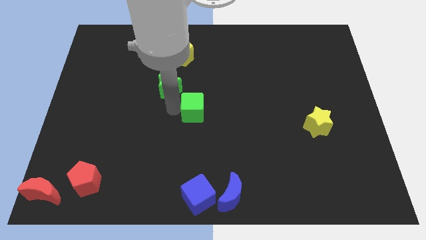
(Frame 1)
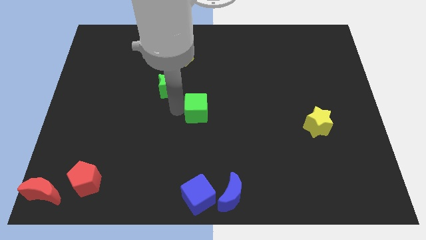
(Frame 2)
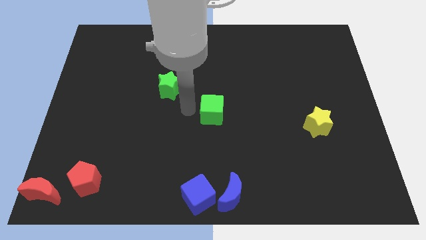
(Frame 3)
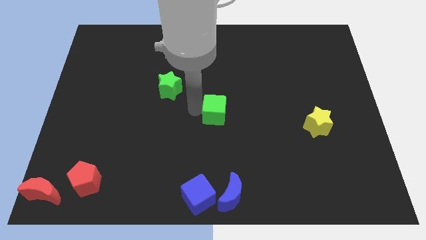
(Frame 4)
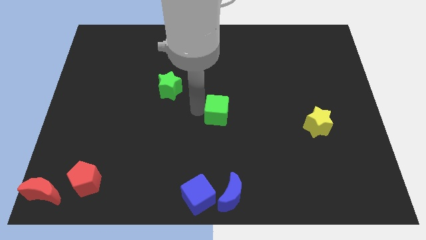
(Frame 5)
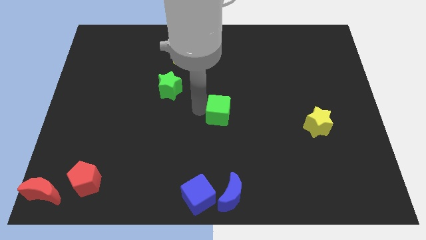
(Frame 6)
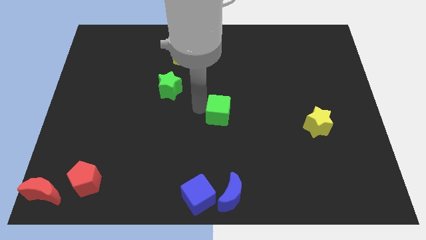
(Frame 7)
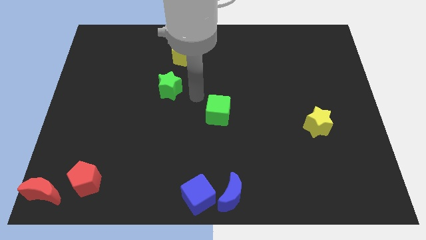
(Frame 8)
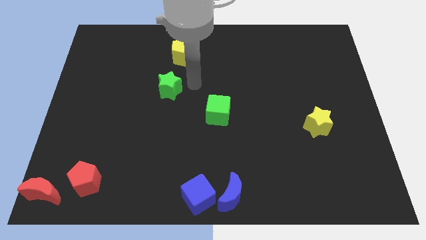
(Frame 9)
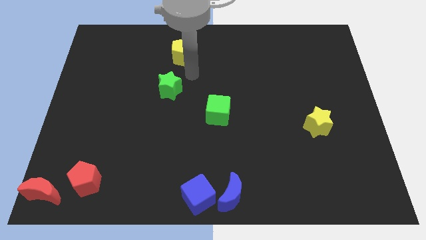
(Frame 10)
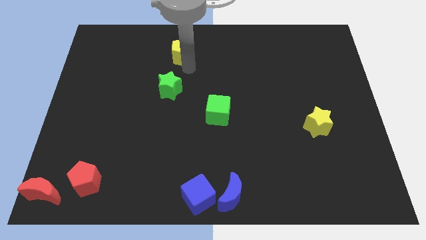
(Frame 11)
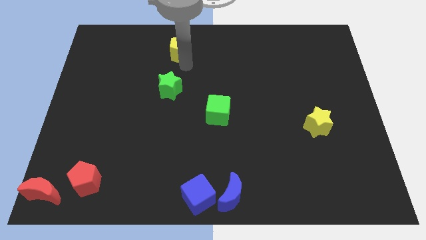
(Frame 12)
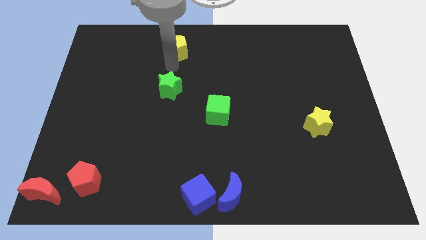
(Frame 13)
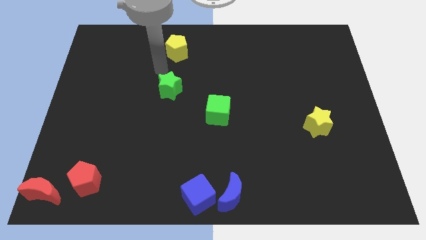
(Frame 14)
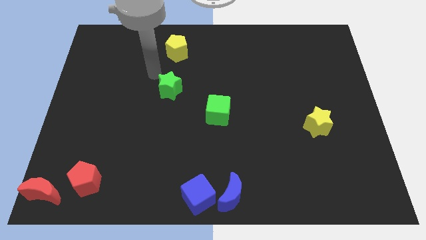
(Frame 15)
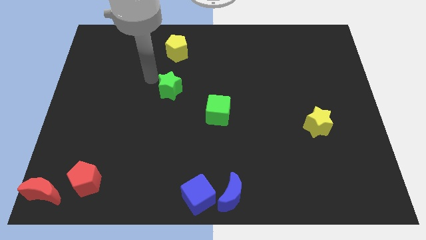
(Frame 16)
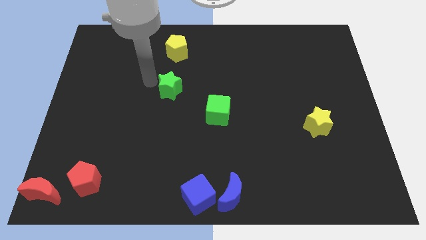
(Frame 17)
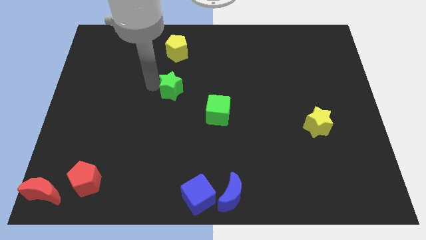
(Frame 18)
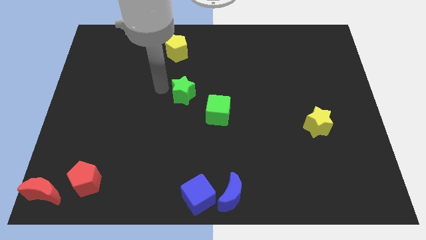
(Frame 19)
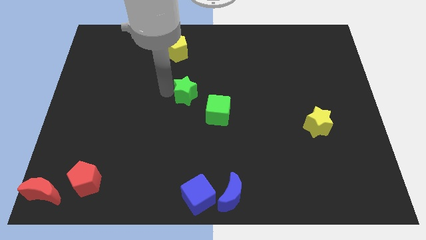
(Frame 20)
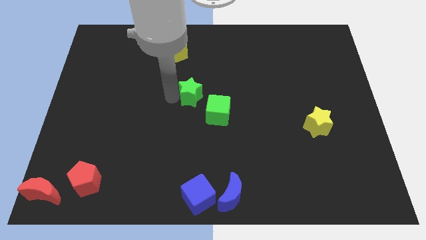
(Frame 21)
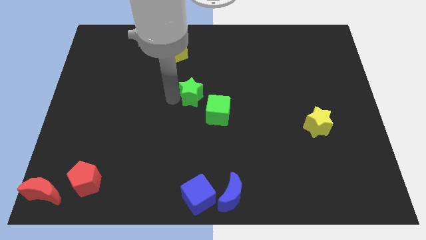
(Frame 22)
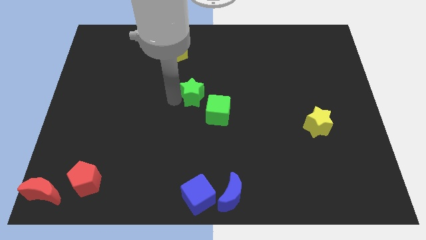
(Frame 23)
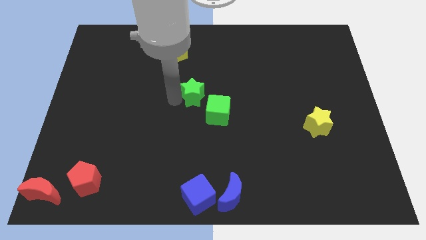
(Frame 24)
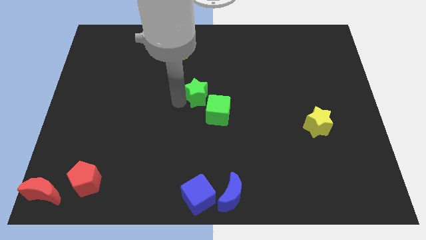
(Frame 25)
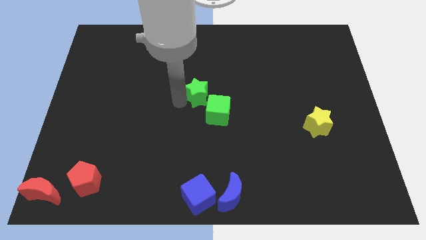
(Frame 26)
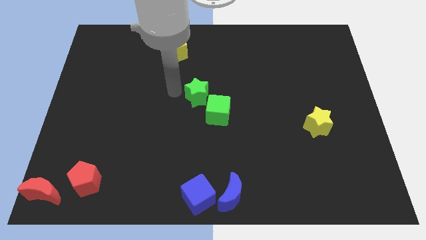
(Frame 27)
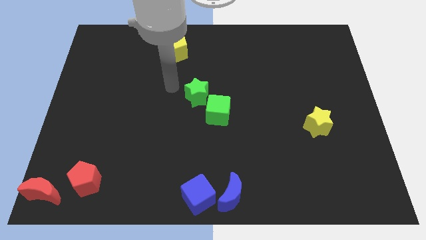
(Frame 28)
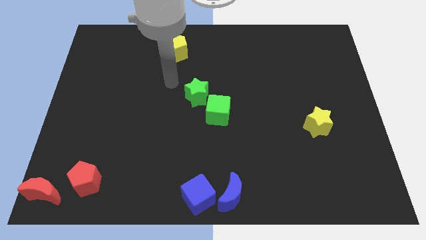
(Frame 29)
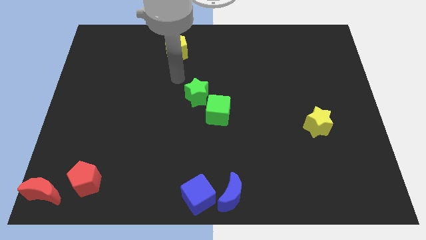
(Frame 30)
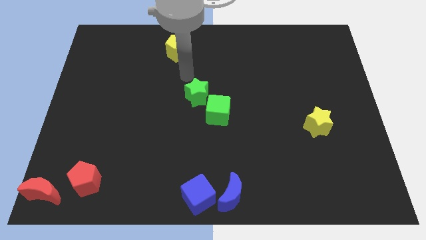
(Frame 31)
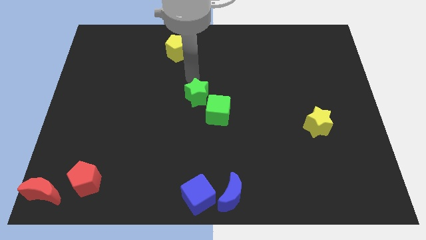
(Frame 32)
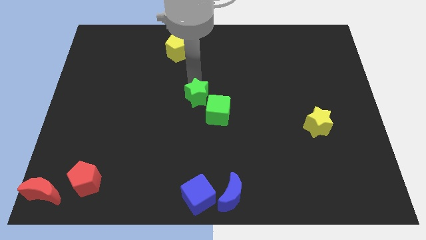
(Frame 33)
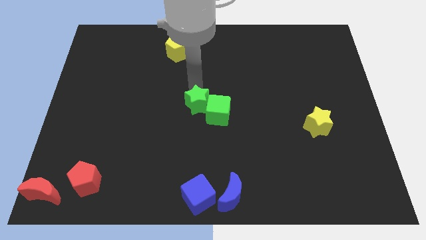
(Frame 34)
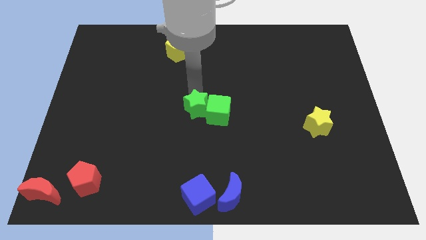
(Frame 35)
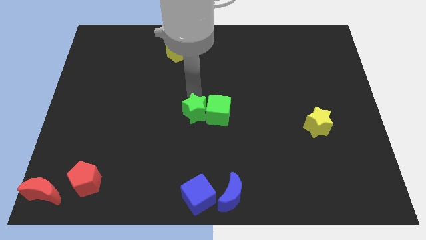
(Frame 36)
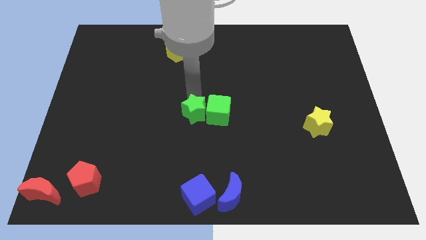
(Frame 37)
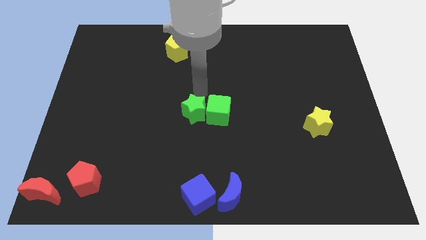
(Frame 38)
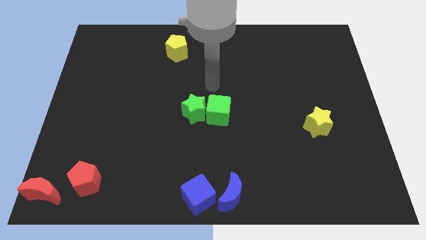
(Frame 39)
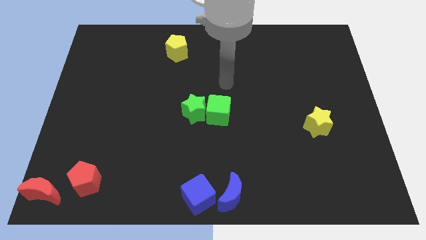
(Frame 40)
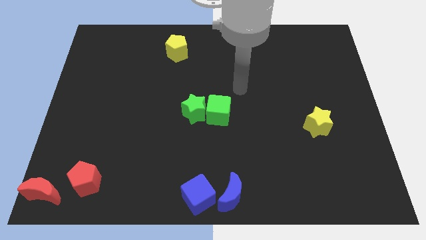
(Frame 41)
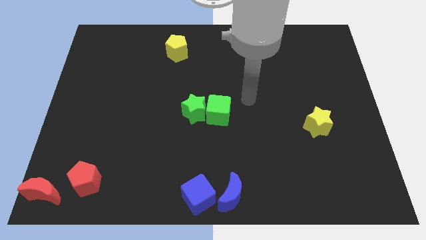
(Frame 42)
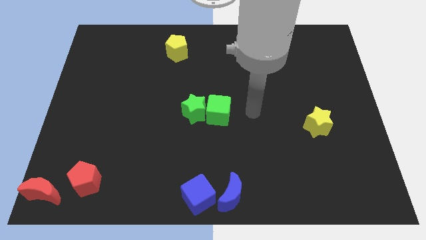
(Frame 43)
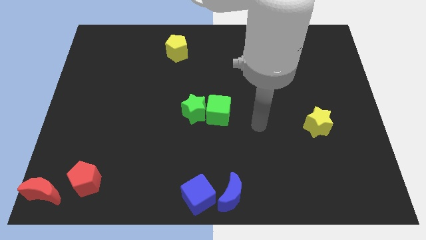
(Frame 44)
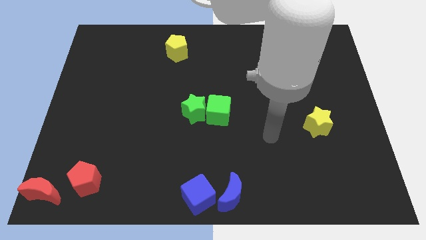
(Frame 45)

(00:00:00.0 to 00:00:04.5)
push green blocks vertically above blue blocks

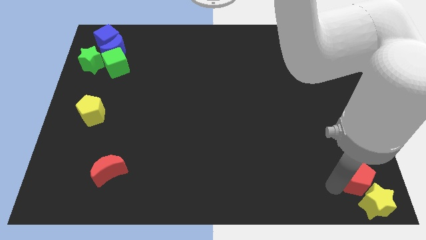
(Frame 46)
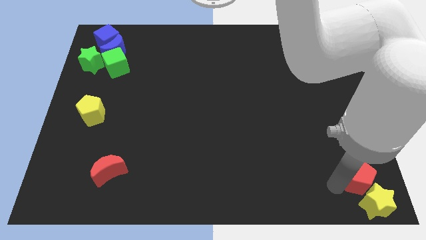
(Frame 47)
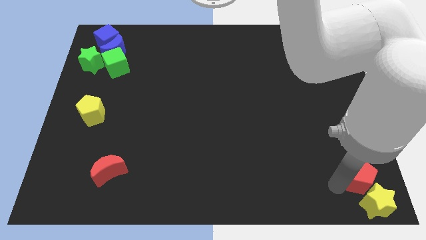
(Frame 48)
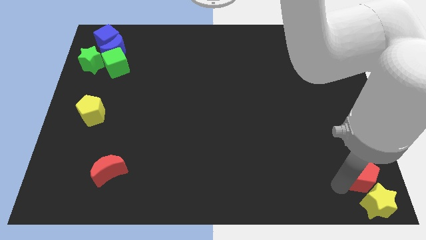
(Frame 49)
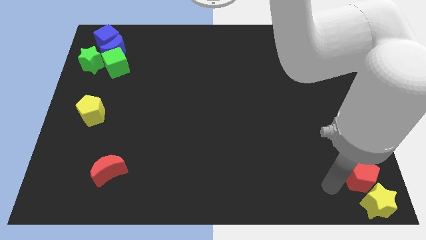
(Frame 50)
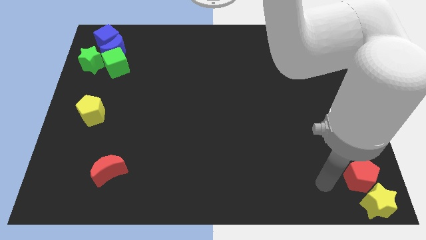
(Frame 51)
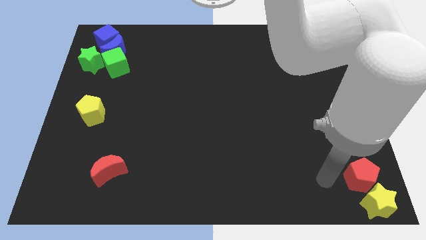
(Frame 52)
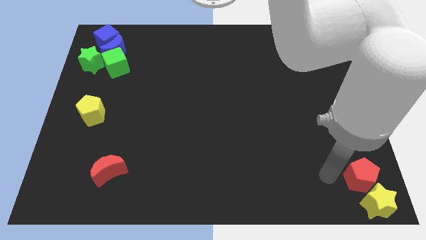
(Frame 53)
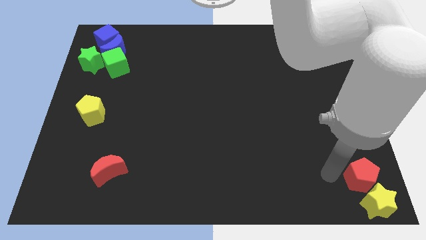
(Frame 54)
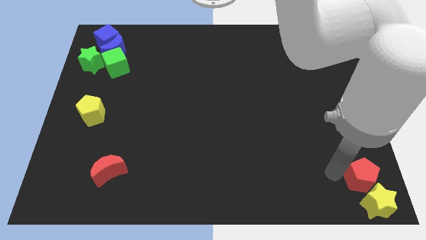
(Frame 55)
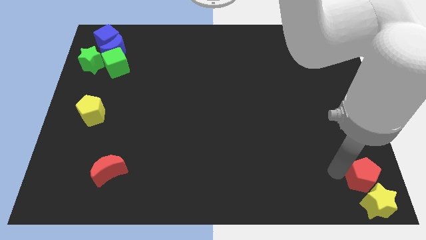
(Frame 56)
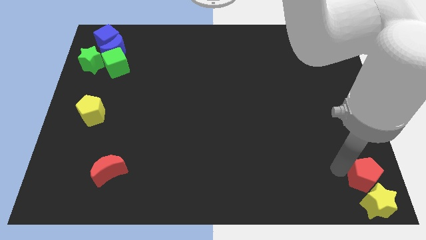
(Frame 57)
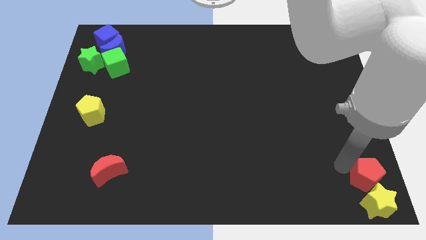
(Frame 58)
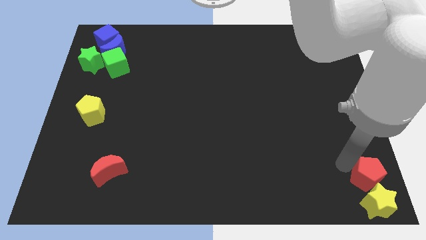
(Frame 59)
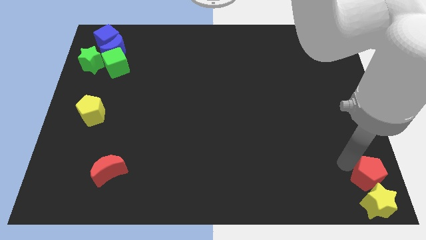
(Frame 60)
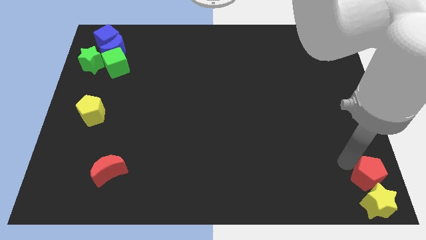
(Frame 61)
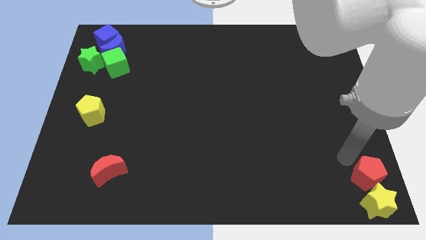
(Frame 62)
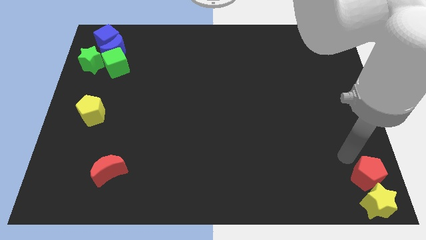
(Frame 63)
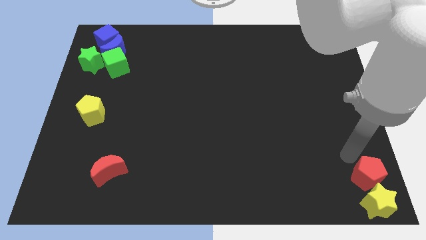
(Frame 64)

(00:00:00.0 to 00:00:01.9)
place the red pentagon above the yellow star

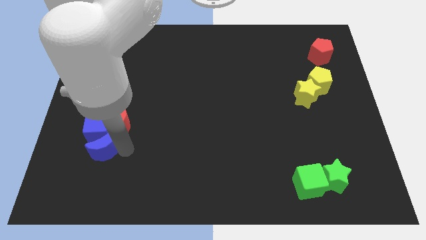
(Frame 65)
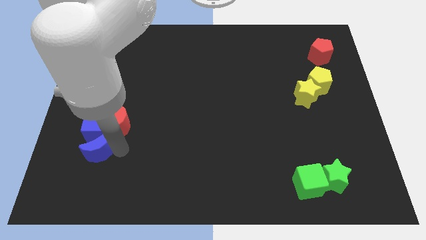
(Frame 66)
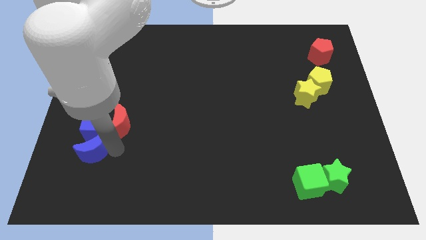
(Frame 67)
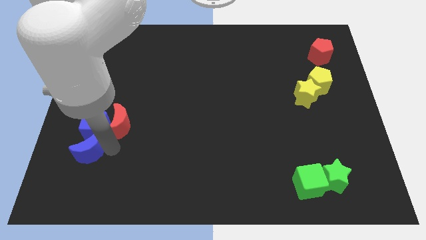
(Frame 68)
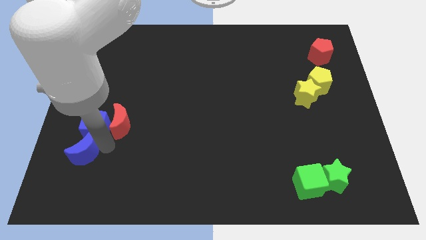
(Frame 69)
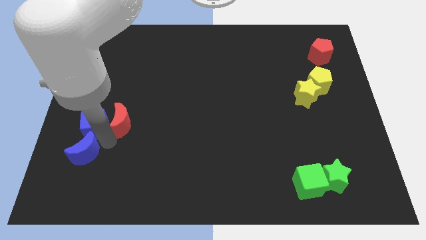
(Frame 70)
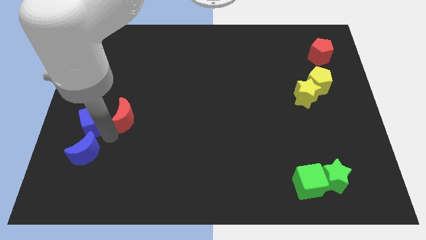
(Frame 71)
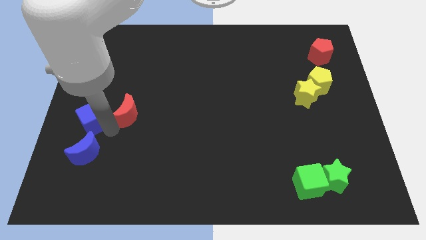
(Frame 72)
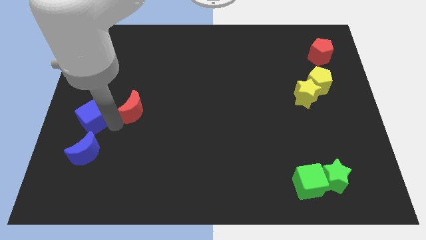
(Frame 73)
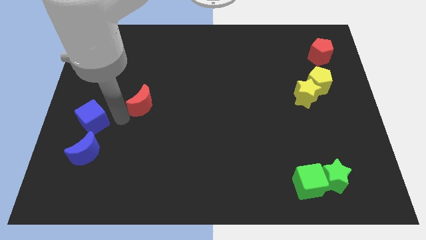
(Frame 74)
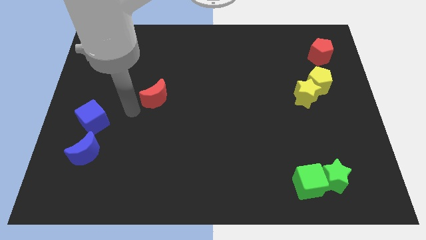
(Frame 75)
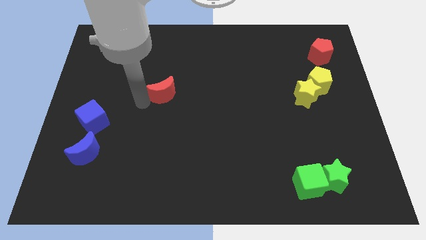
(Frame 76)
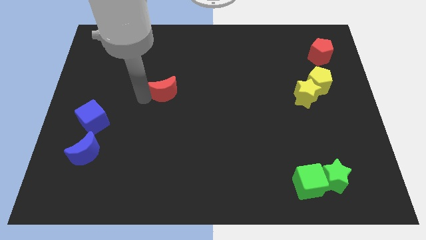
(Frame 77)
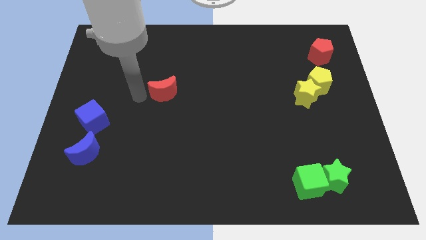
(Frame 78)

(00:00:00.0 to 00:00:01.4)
separate the red moon away from the blue cube

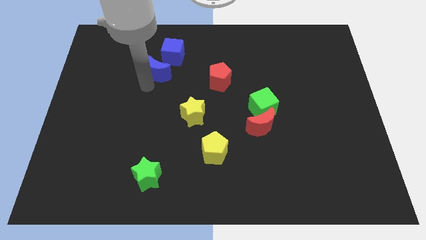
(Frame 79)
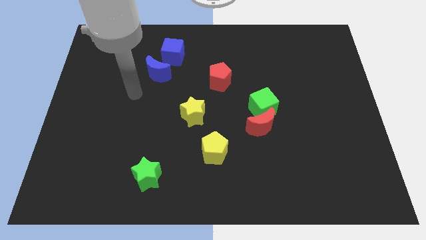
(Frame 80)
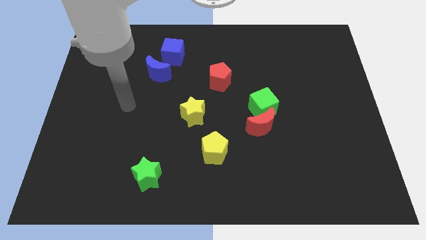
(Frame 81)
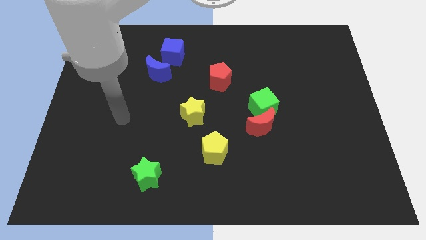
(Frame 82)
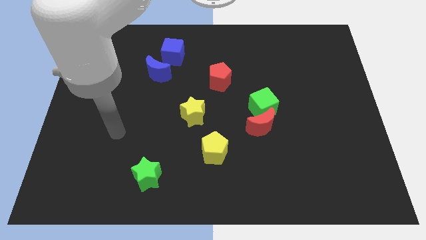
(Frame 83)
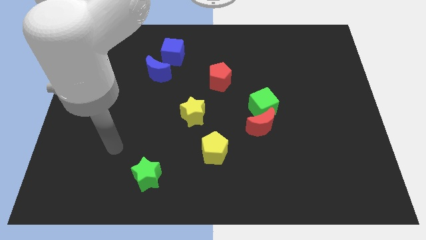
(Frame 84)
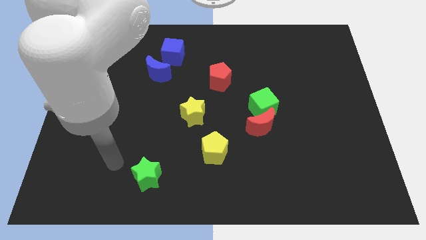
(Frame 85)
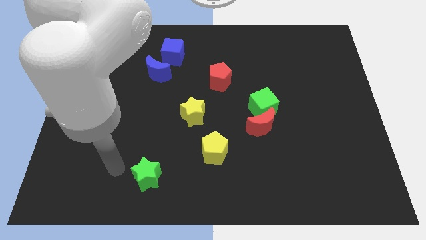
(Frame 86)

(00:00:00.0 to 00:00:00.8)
move your arm away from the blue moon

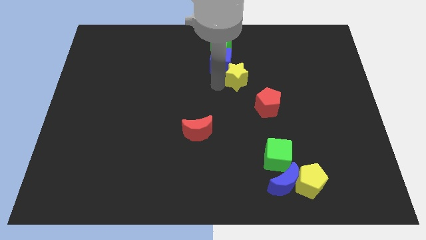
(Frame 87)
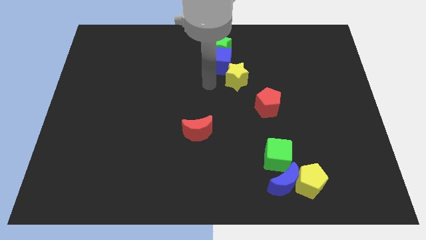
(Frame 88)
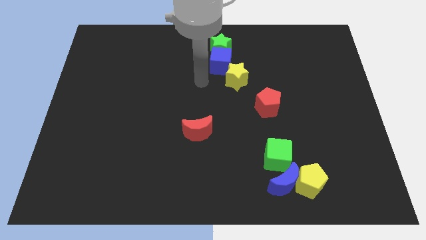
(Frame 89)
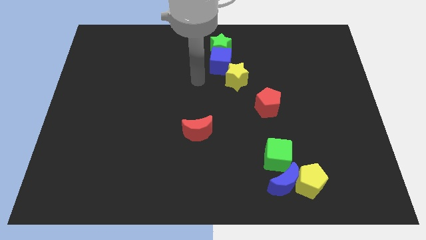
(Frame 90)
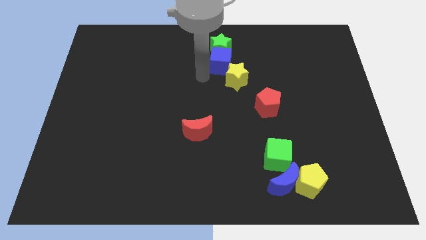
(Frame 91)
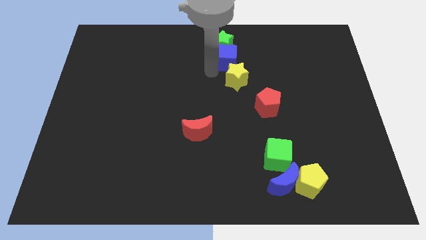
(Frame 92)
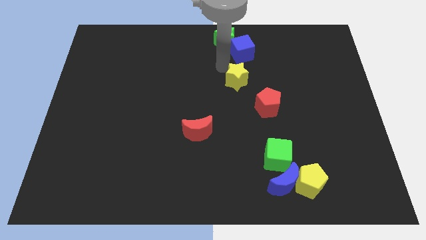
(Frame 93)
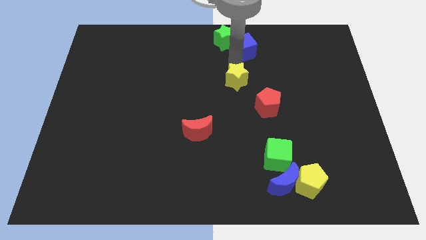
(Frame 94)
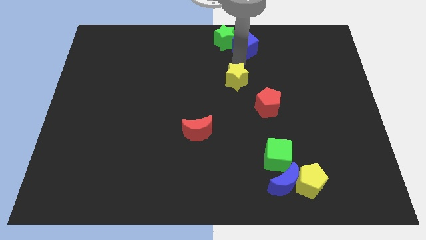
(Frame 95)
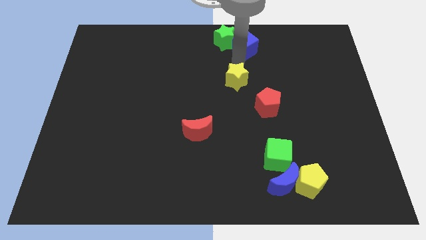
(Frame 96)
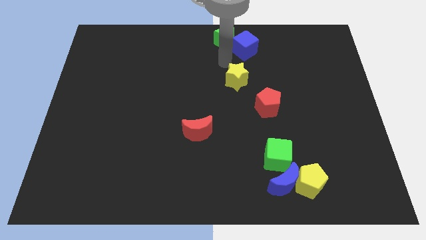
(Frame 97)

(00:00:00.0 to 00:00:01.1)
push the blue cube slightly up
